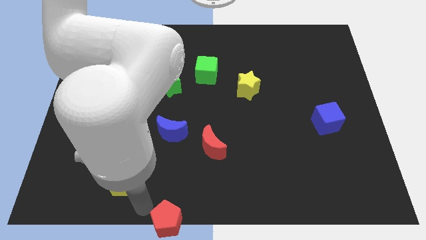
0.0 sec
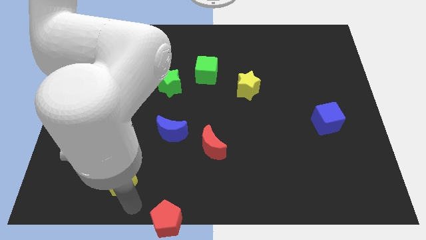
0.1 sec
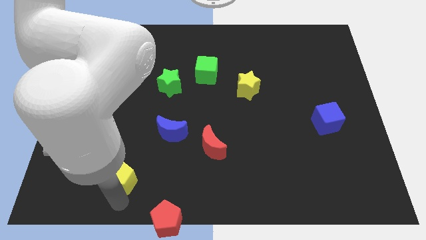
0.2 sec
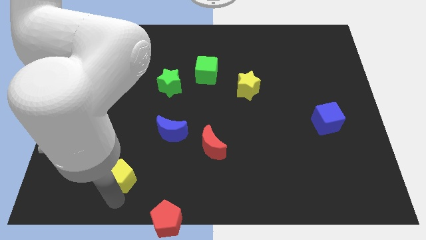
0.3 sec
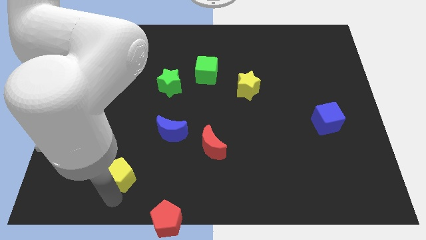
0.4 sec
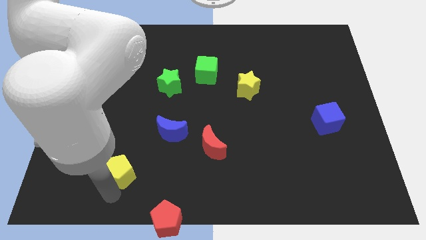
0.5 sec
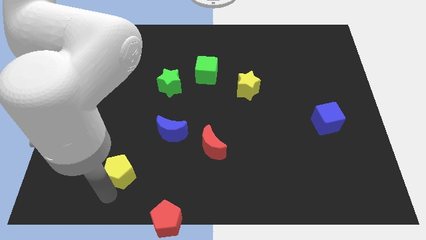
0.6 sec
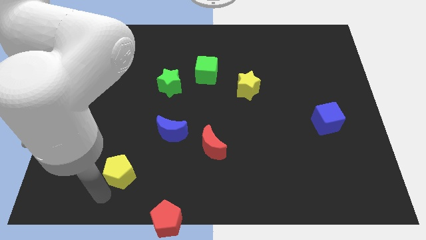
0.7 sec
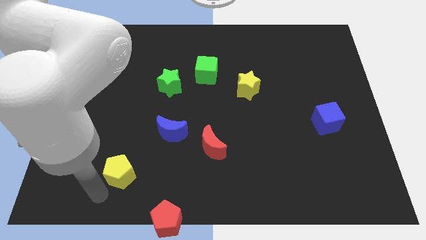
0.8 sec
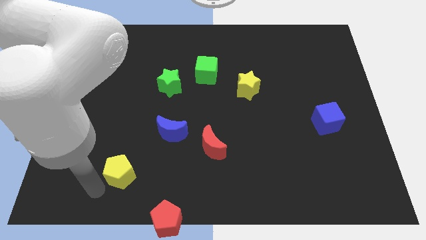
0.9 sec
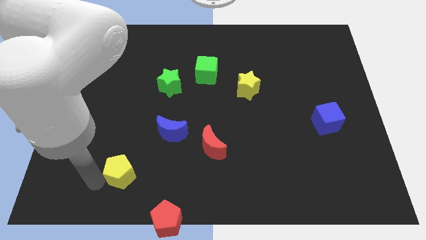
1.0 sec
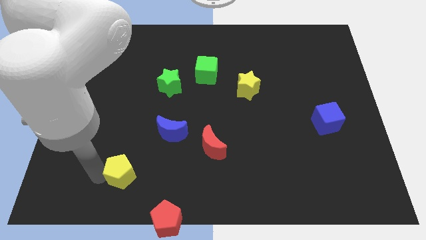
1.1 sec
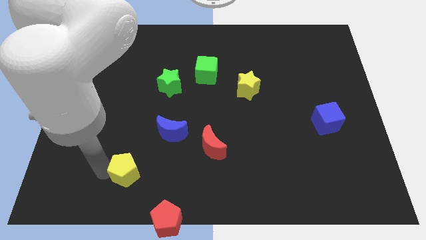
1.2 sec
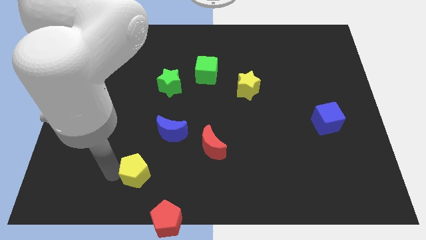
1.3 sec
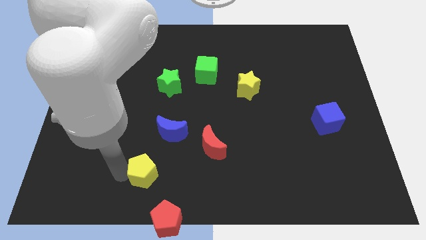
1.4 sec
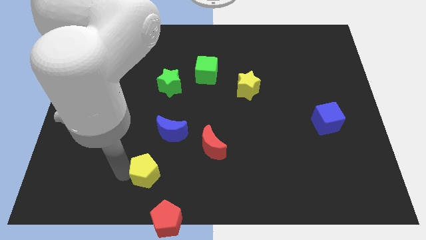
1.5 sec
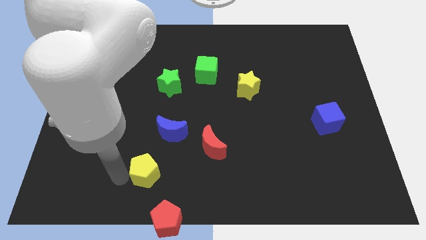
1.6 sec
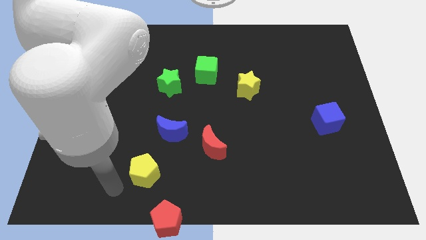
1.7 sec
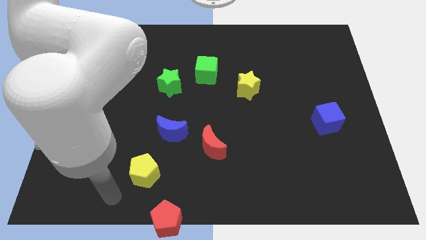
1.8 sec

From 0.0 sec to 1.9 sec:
move the yellow pentagon diagonally left of the red pentagon

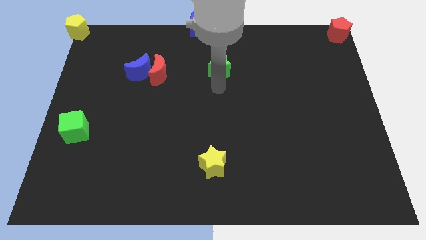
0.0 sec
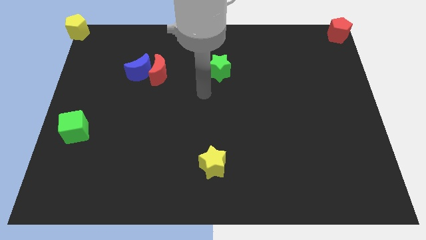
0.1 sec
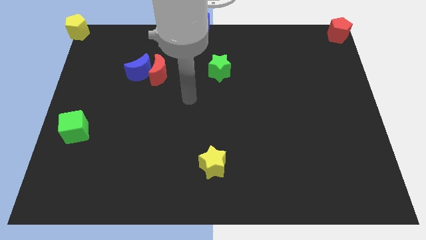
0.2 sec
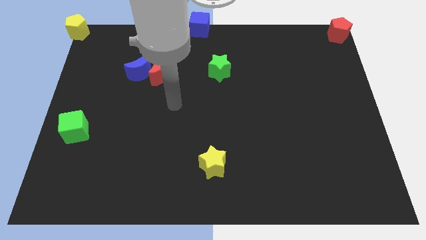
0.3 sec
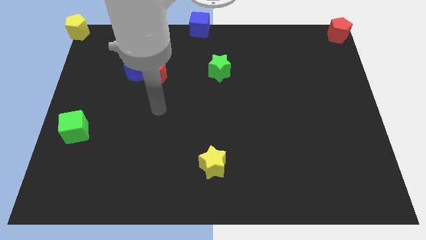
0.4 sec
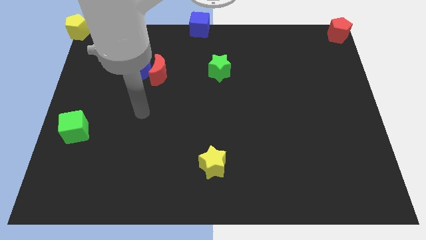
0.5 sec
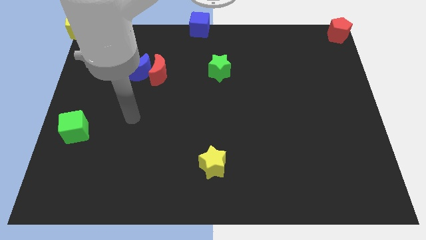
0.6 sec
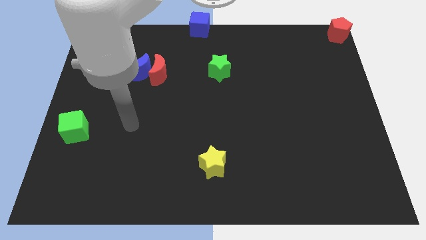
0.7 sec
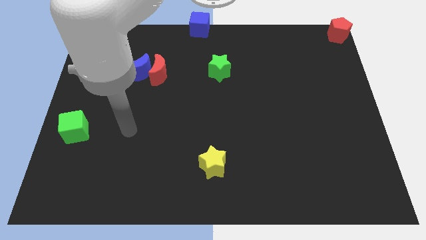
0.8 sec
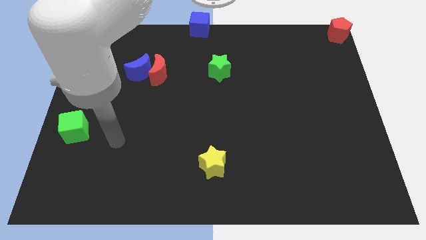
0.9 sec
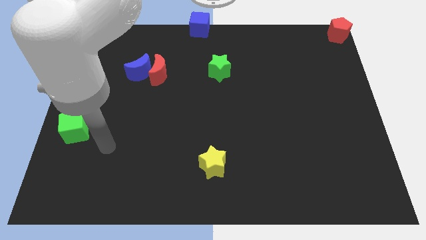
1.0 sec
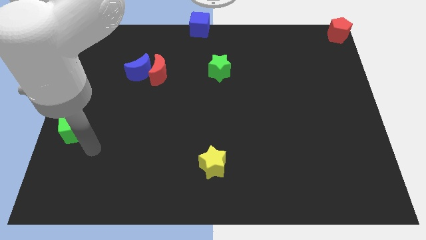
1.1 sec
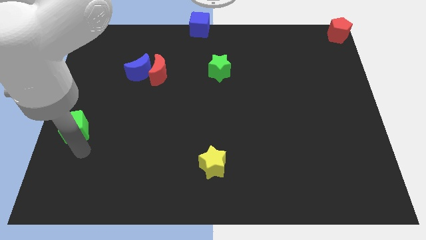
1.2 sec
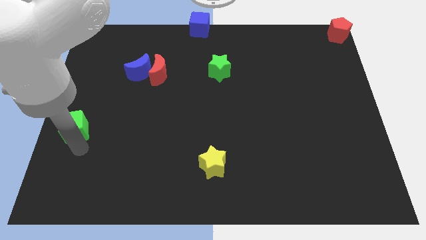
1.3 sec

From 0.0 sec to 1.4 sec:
place your arm below the green cube

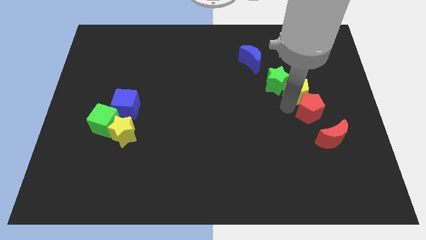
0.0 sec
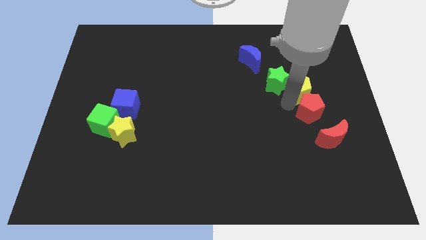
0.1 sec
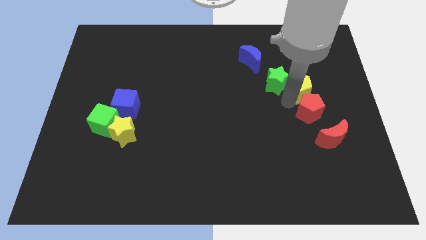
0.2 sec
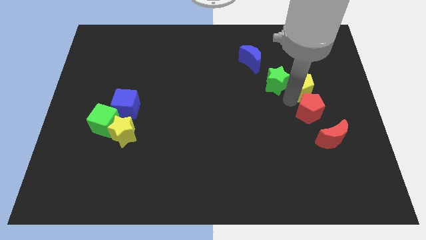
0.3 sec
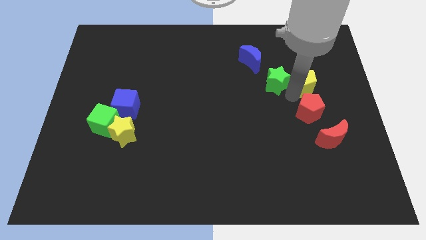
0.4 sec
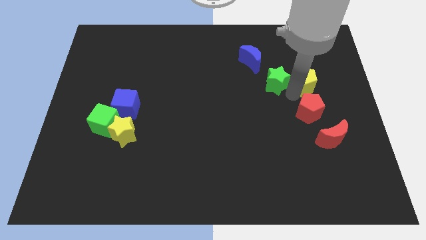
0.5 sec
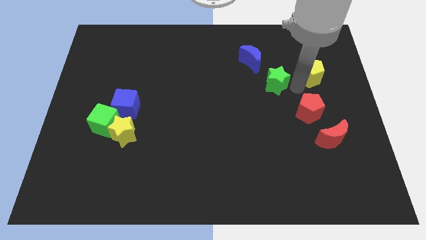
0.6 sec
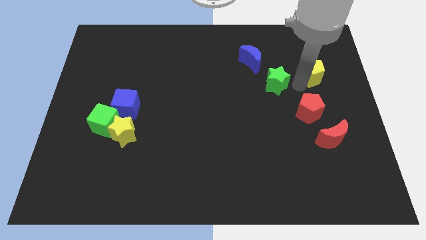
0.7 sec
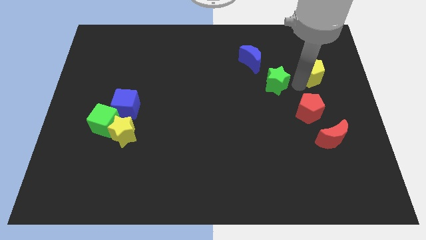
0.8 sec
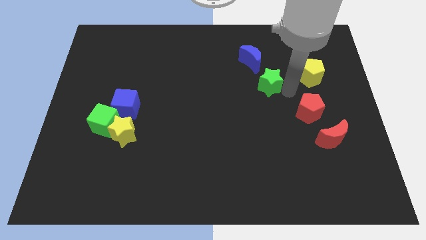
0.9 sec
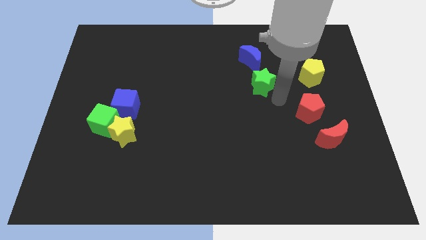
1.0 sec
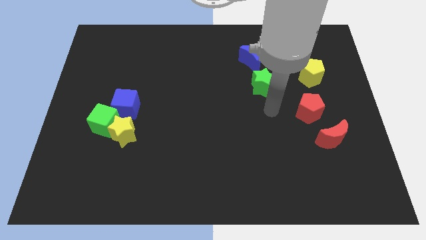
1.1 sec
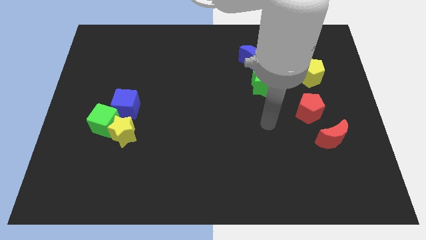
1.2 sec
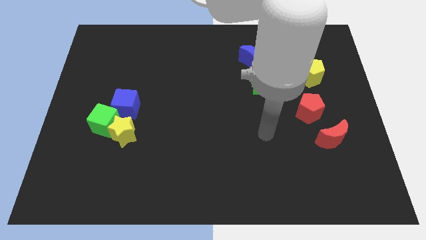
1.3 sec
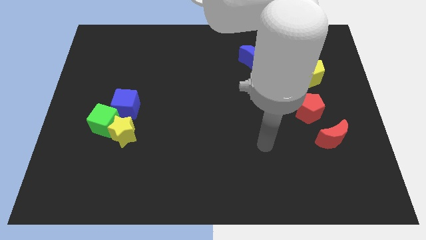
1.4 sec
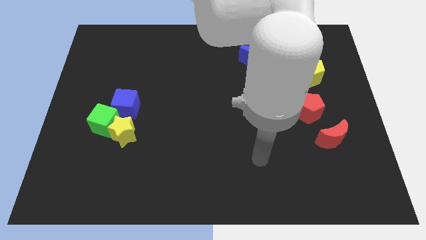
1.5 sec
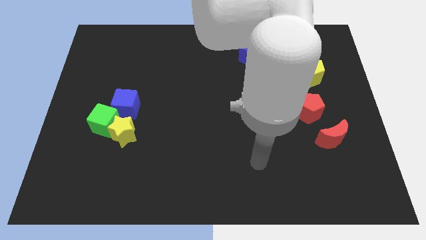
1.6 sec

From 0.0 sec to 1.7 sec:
separate the yellow pentagon from the red pentagon

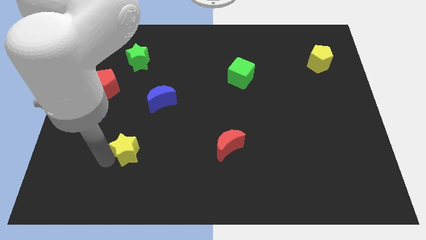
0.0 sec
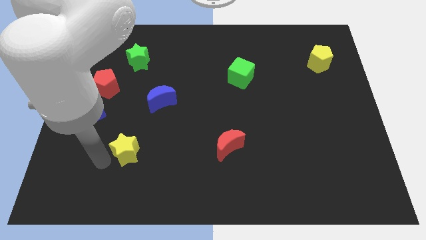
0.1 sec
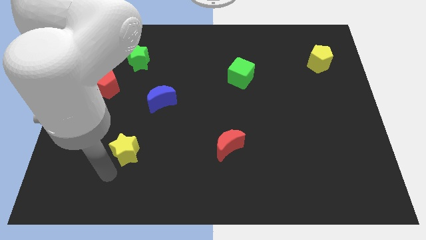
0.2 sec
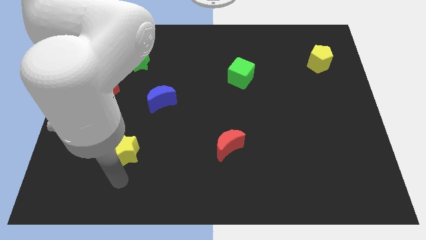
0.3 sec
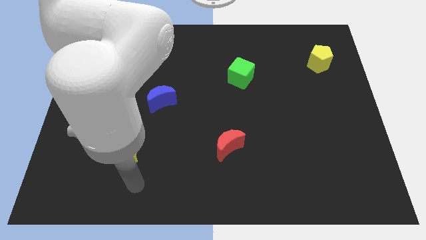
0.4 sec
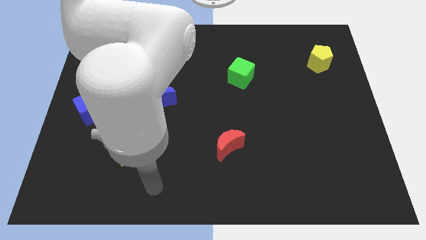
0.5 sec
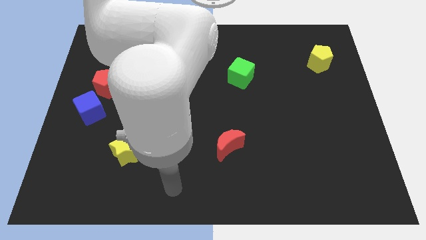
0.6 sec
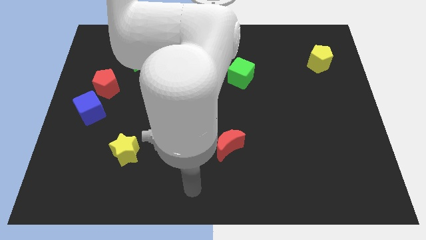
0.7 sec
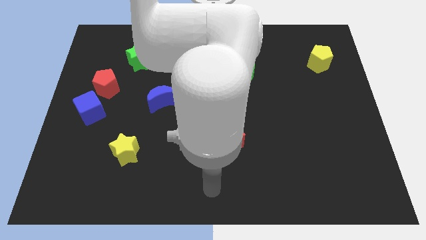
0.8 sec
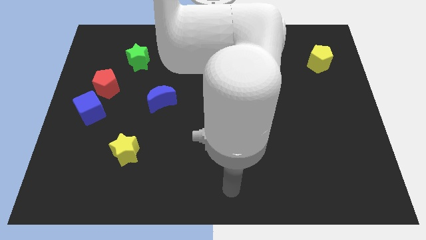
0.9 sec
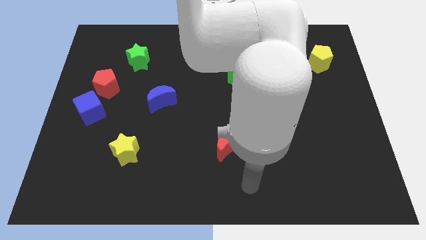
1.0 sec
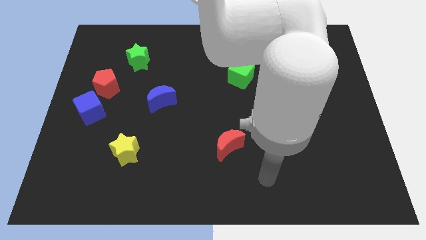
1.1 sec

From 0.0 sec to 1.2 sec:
put your arm at the bottom center

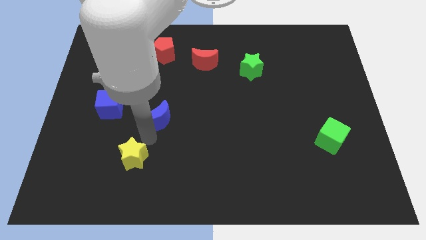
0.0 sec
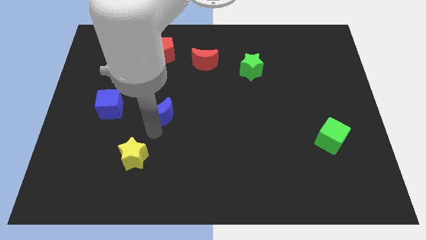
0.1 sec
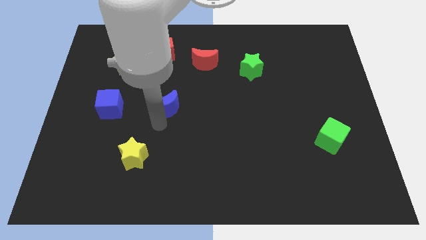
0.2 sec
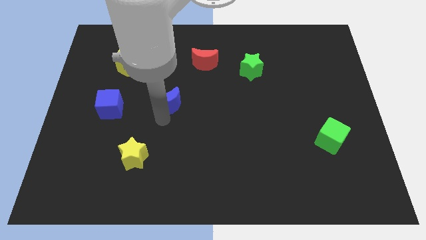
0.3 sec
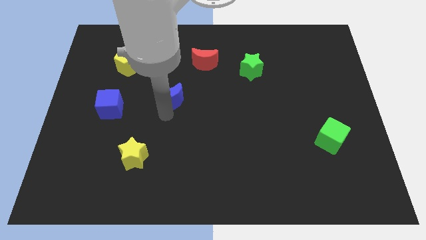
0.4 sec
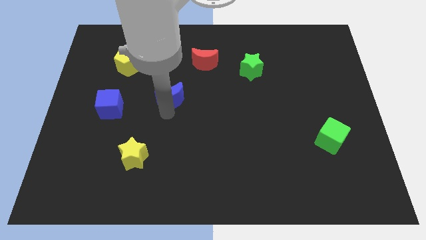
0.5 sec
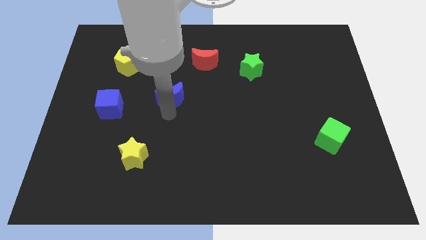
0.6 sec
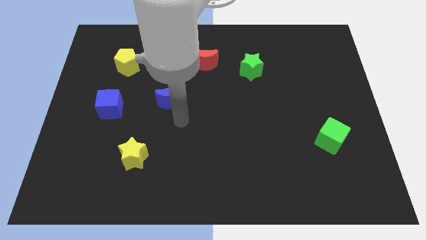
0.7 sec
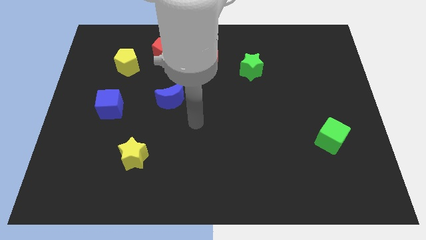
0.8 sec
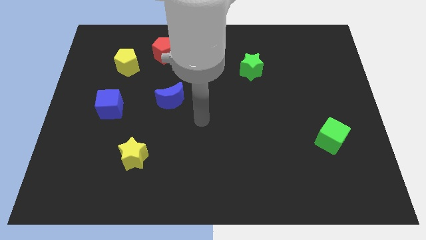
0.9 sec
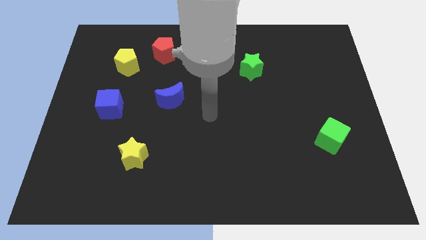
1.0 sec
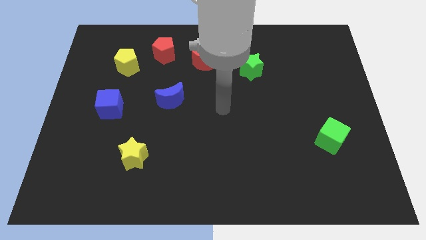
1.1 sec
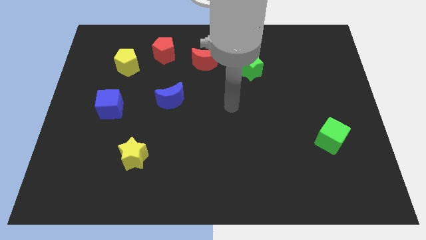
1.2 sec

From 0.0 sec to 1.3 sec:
put the blue crescent below the red pentagon

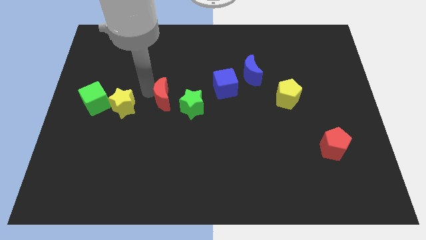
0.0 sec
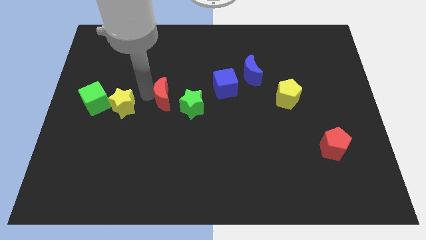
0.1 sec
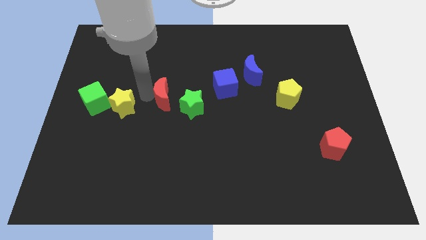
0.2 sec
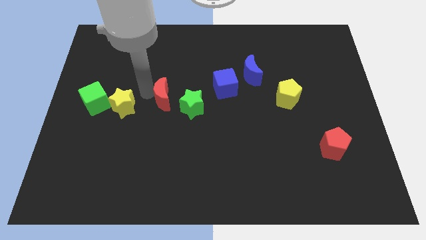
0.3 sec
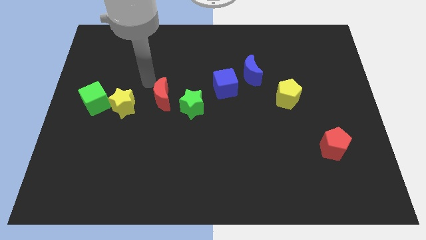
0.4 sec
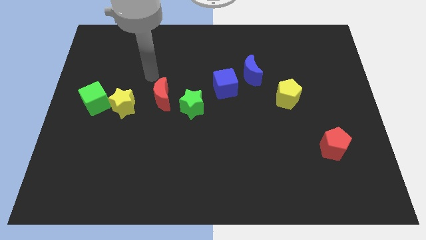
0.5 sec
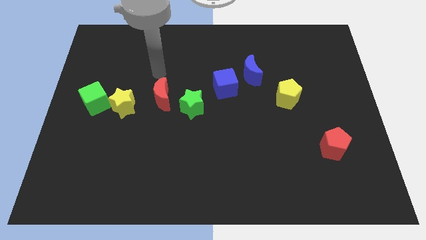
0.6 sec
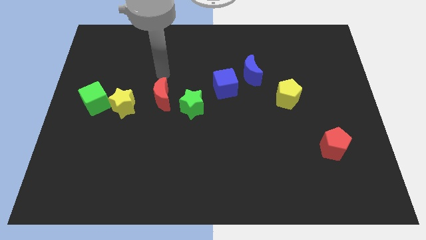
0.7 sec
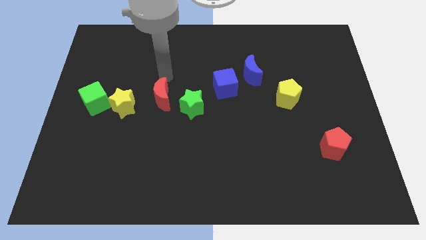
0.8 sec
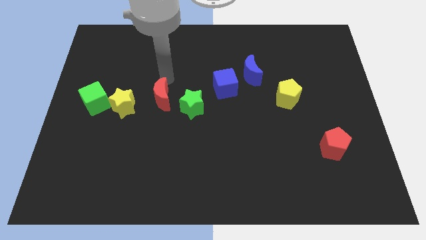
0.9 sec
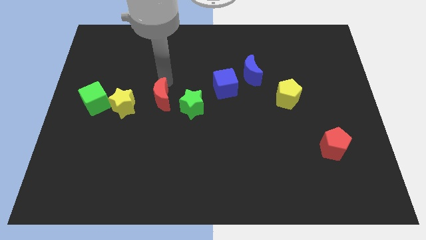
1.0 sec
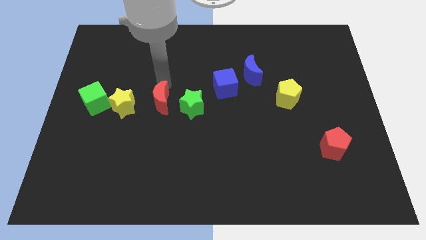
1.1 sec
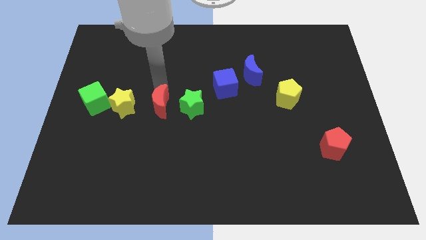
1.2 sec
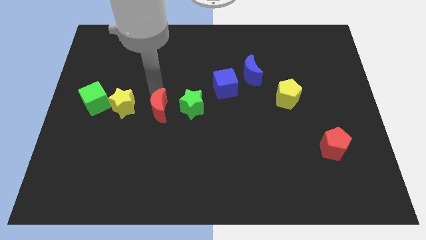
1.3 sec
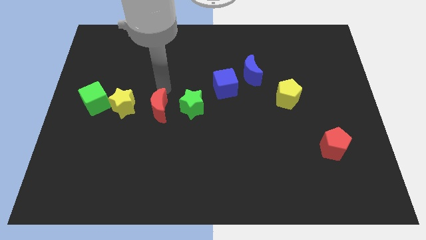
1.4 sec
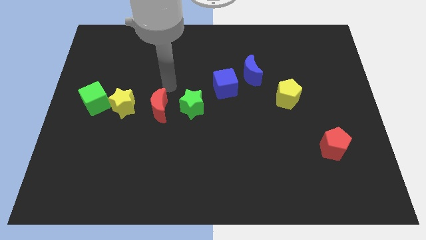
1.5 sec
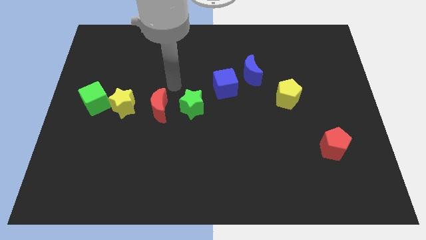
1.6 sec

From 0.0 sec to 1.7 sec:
place the red crescent in a horizontal line left to the green star
